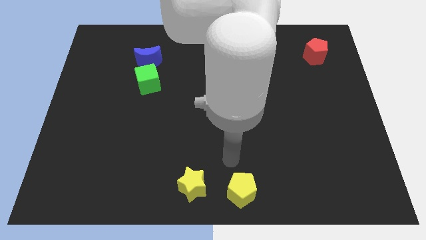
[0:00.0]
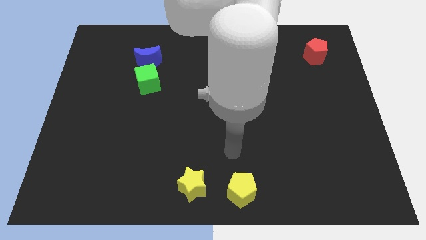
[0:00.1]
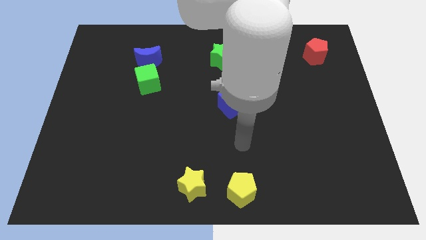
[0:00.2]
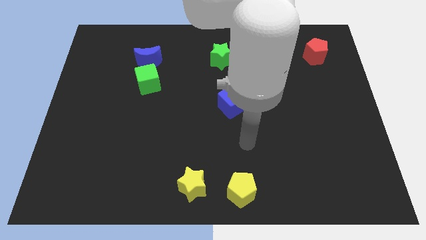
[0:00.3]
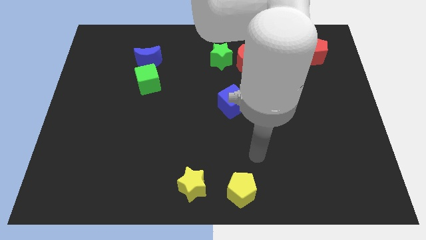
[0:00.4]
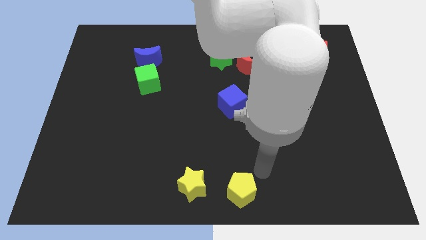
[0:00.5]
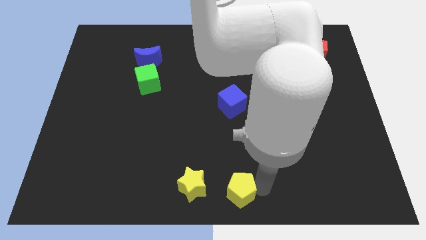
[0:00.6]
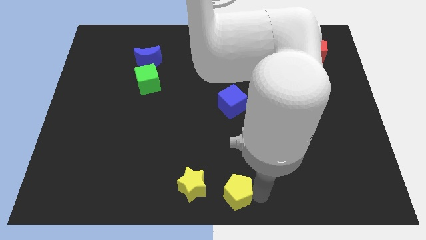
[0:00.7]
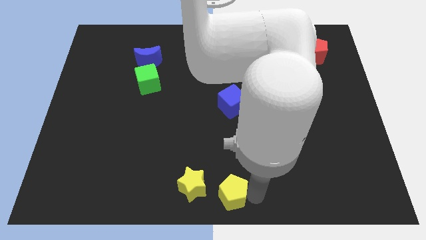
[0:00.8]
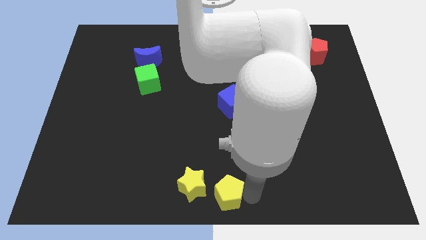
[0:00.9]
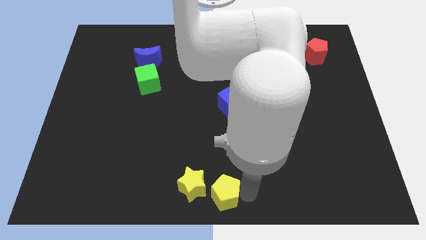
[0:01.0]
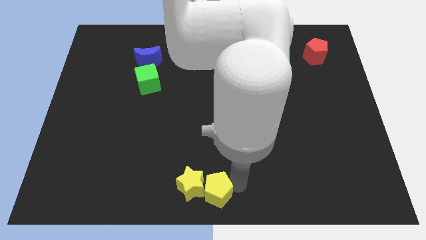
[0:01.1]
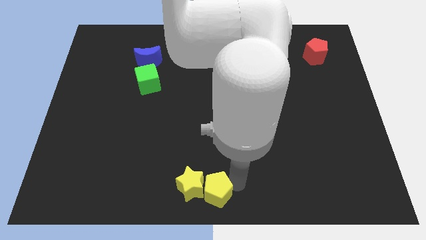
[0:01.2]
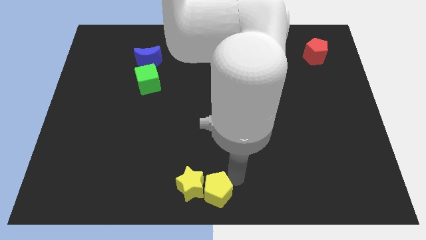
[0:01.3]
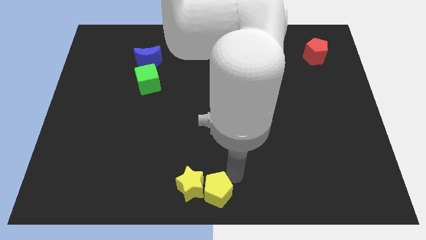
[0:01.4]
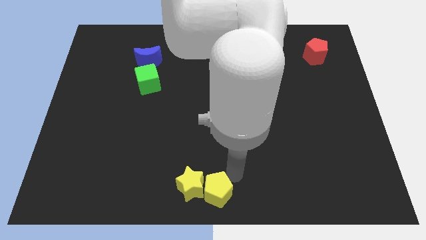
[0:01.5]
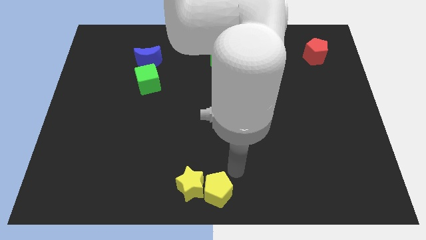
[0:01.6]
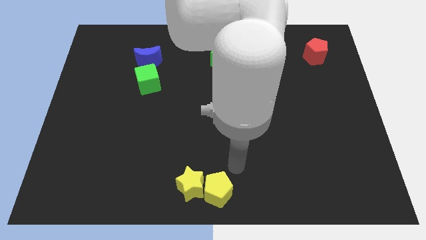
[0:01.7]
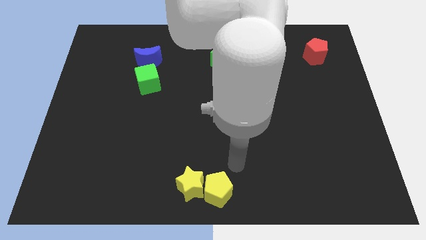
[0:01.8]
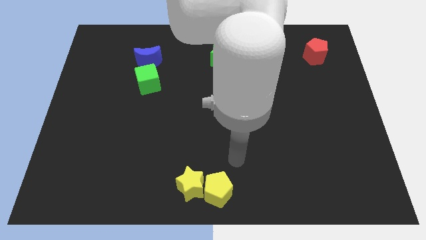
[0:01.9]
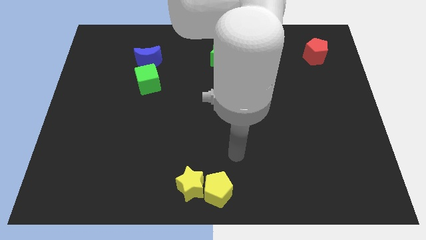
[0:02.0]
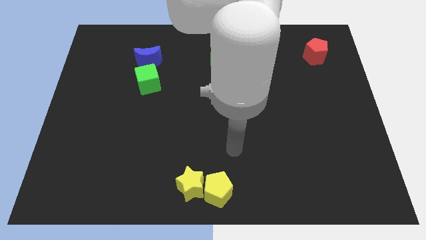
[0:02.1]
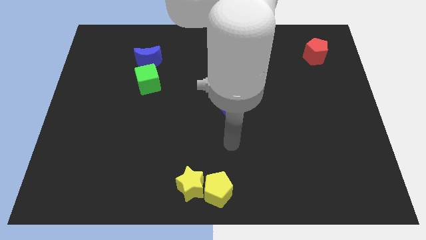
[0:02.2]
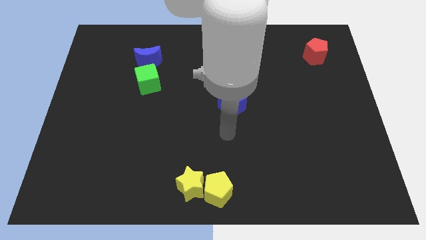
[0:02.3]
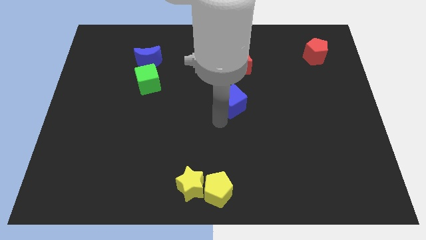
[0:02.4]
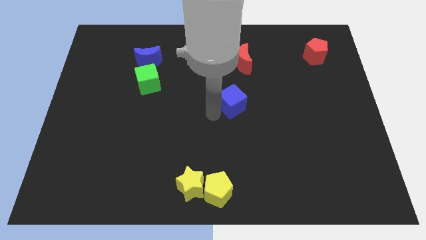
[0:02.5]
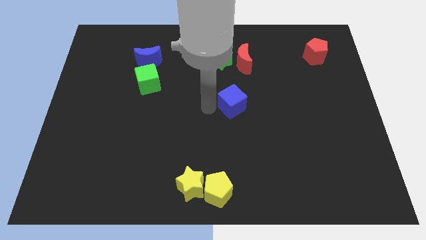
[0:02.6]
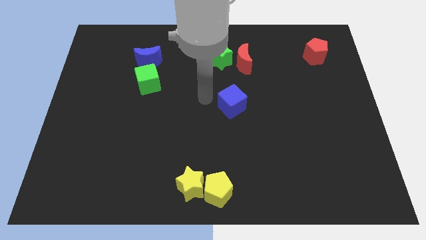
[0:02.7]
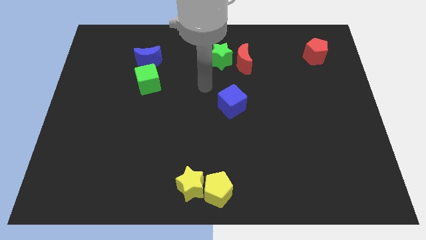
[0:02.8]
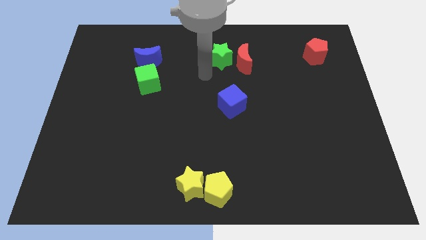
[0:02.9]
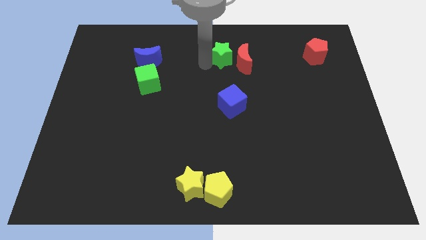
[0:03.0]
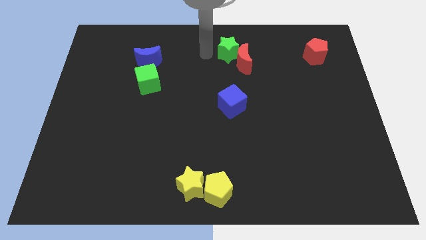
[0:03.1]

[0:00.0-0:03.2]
push the yellow pentagon into the yellow star bottom center of the board

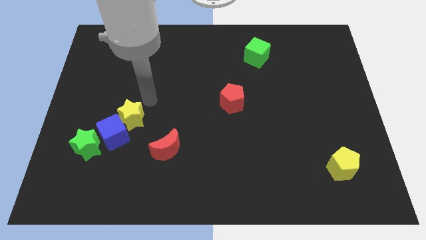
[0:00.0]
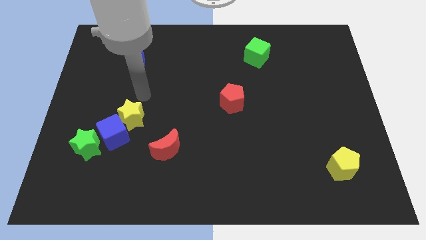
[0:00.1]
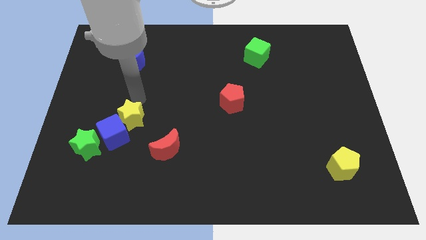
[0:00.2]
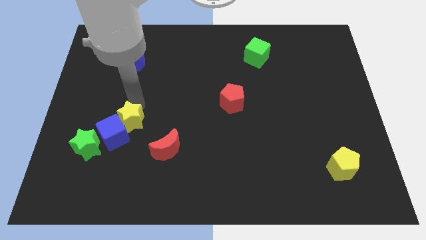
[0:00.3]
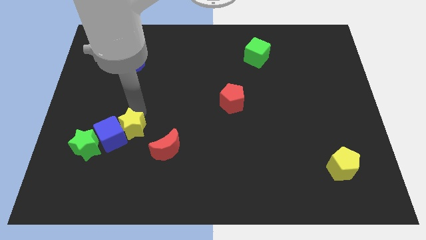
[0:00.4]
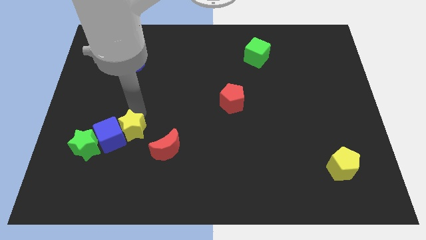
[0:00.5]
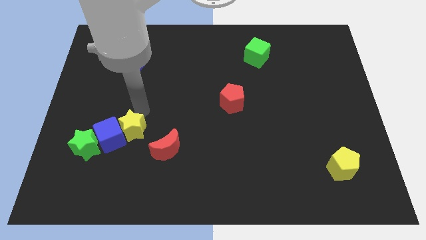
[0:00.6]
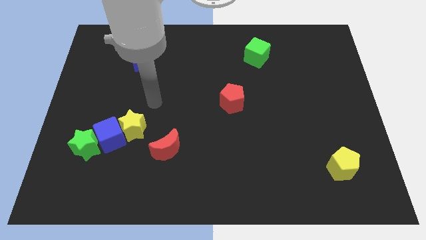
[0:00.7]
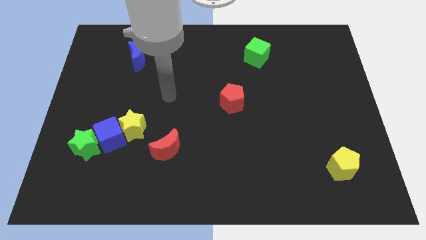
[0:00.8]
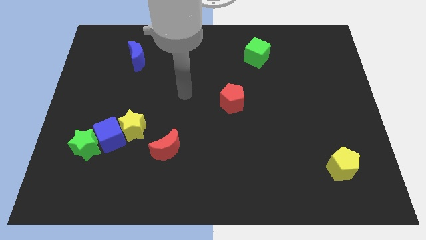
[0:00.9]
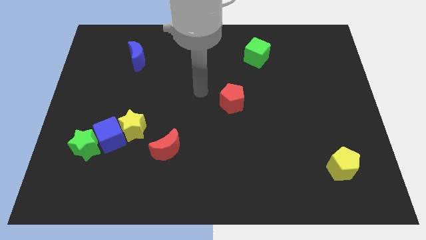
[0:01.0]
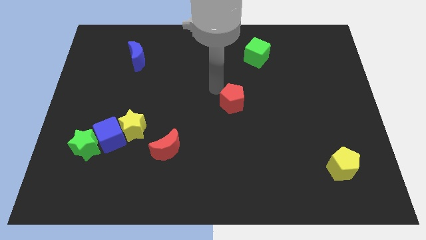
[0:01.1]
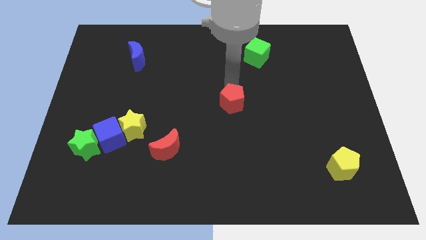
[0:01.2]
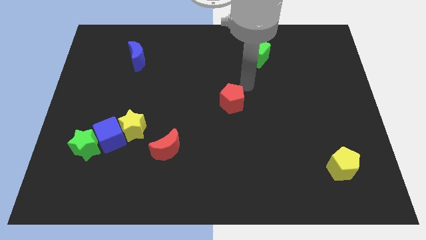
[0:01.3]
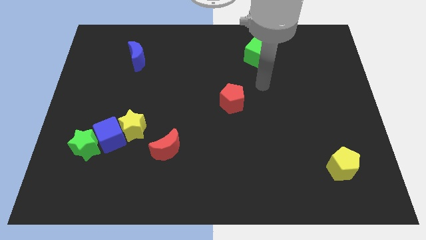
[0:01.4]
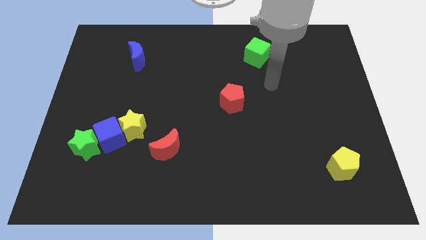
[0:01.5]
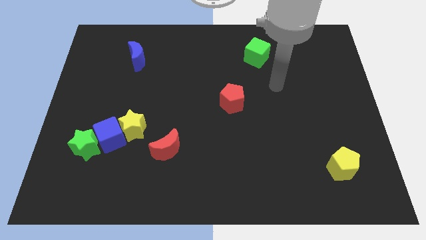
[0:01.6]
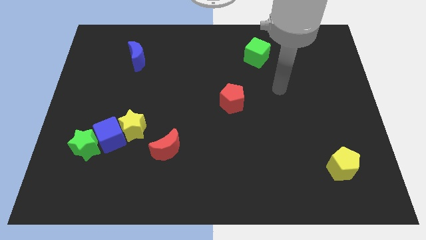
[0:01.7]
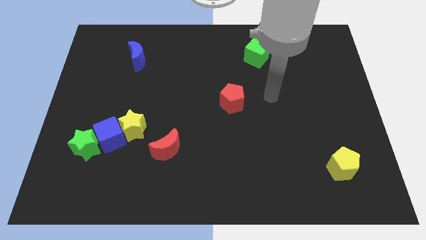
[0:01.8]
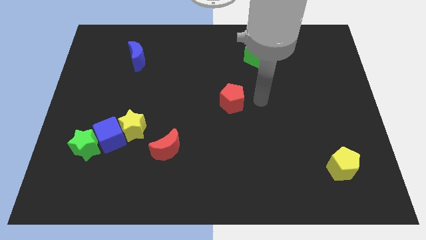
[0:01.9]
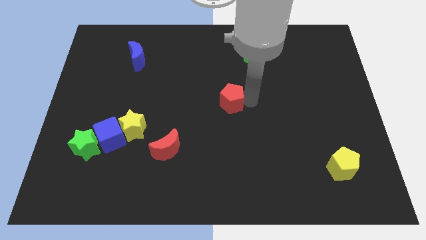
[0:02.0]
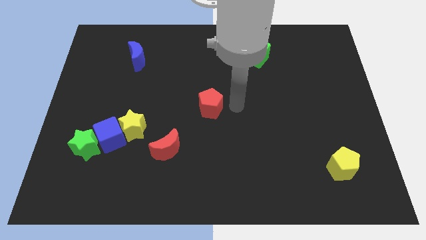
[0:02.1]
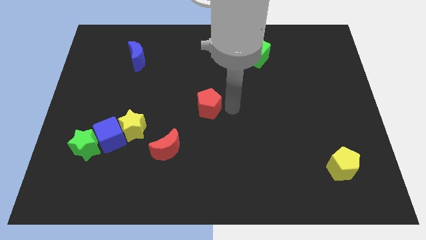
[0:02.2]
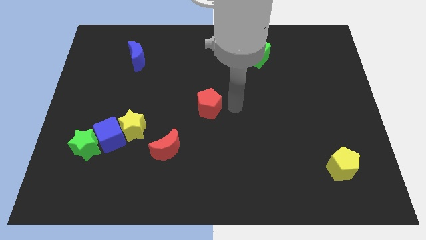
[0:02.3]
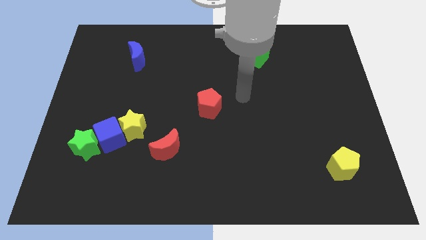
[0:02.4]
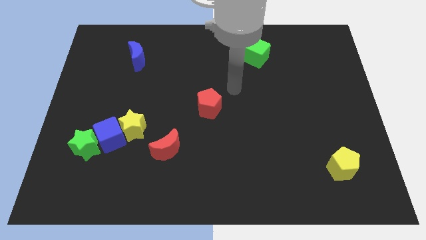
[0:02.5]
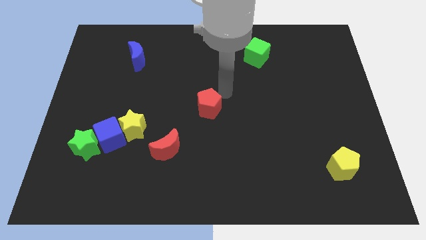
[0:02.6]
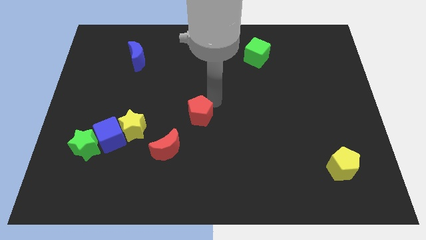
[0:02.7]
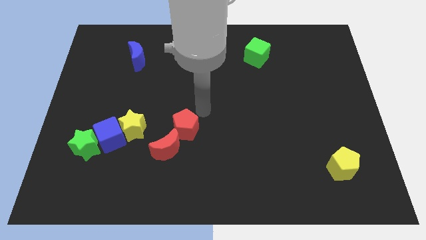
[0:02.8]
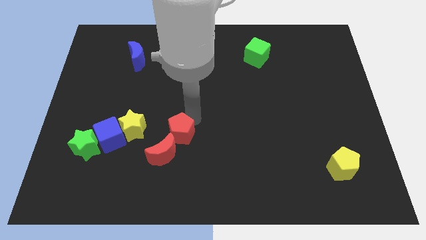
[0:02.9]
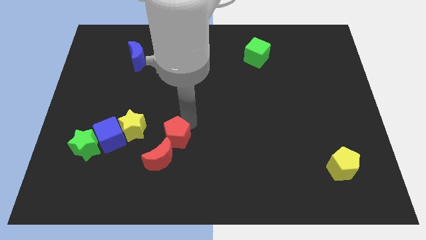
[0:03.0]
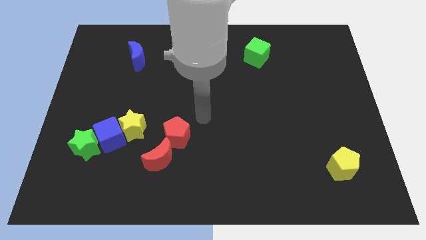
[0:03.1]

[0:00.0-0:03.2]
push the red pentagon diagonal to the right of the yellow star

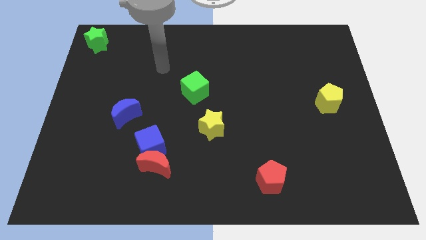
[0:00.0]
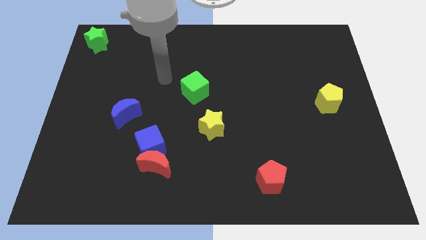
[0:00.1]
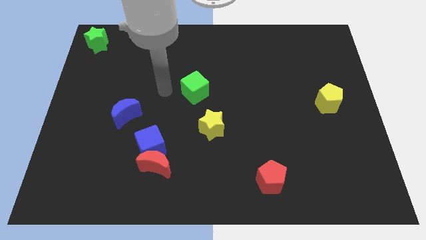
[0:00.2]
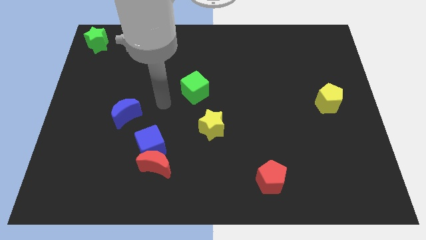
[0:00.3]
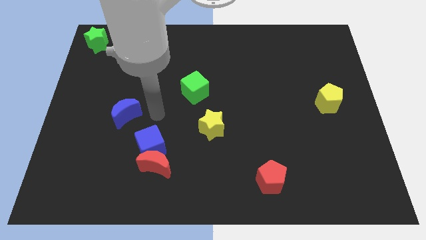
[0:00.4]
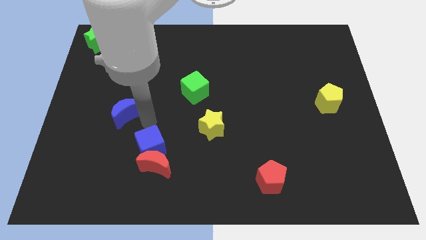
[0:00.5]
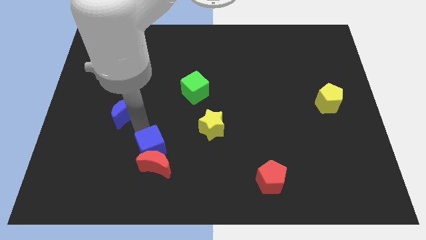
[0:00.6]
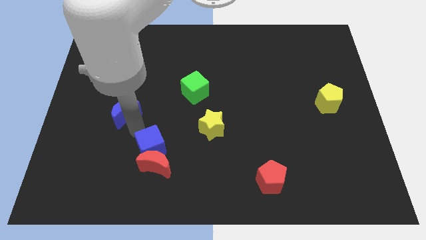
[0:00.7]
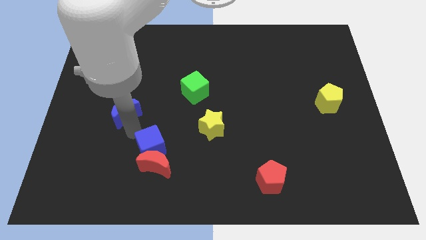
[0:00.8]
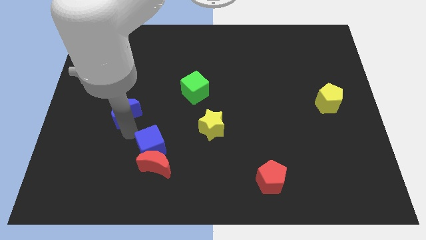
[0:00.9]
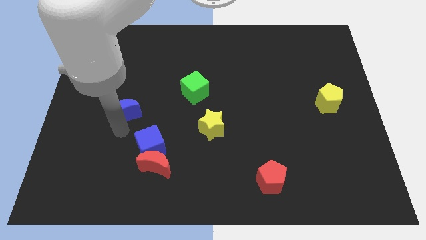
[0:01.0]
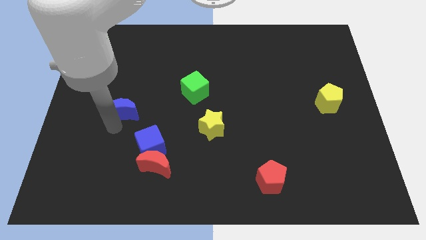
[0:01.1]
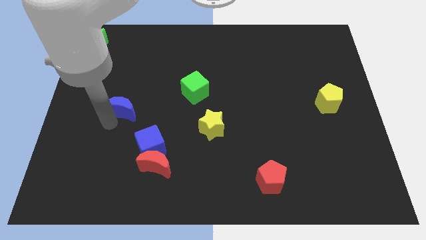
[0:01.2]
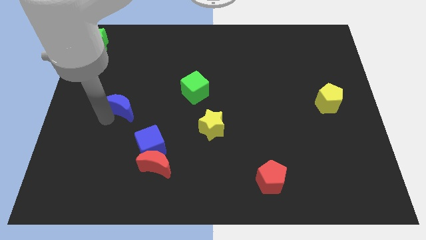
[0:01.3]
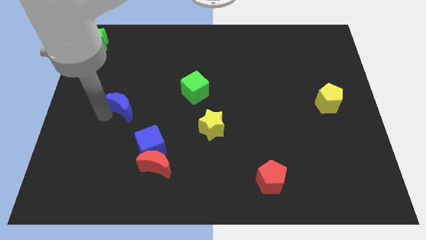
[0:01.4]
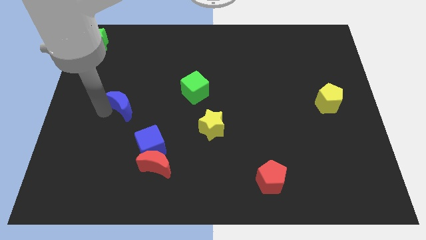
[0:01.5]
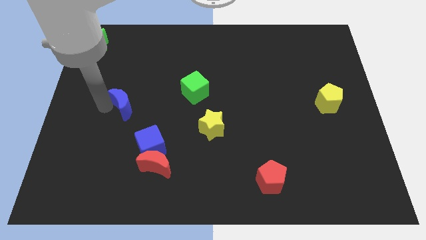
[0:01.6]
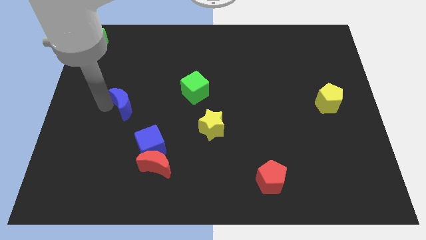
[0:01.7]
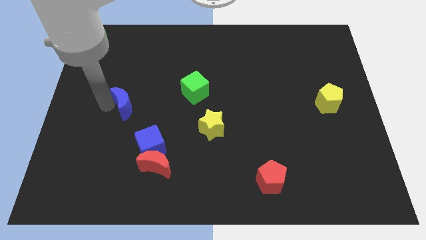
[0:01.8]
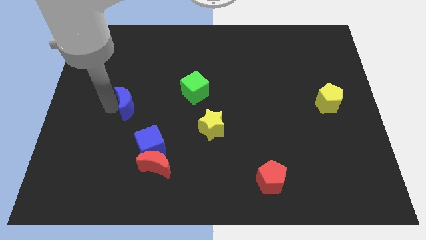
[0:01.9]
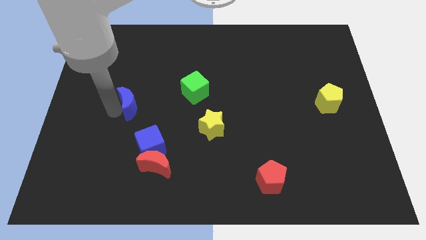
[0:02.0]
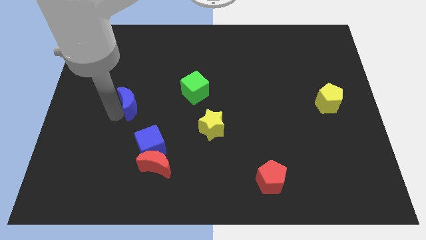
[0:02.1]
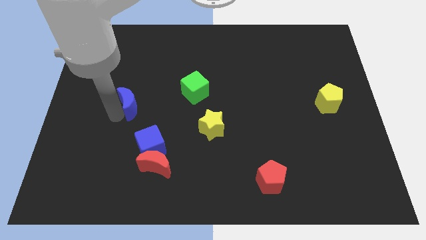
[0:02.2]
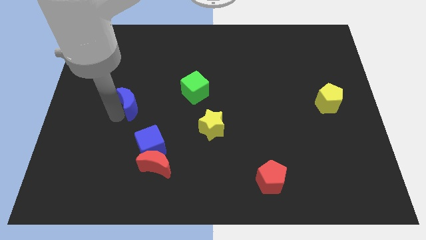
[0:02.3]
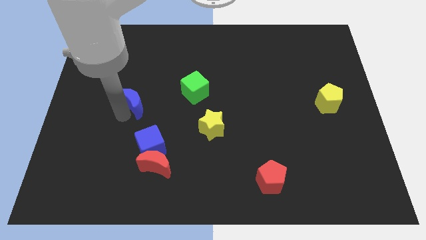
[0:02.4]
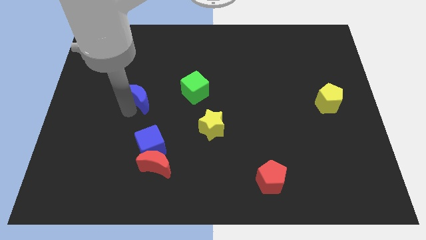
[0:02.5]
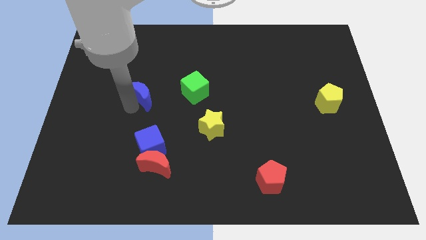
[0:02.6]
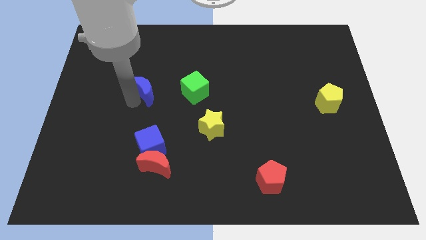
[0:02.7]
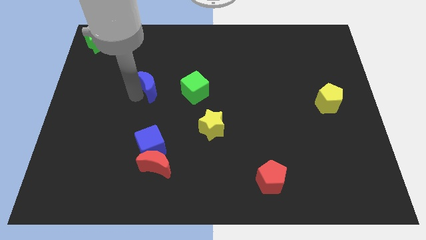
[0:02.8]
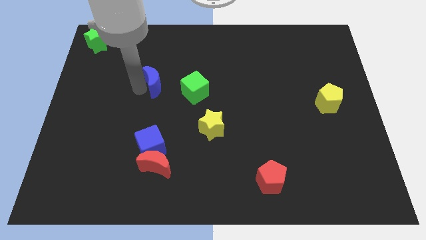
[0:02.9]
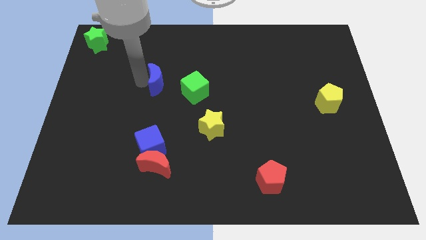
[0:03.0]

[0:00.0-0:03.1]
place the blue moon to the left of the green cube
